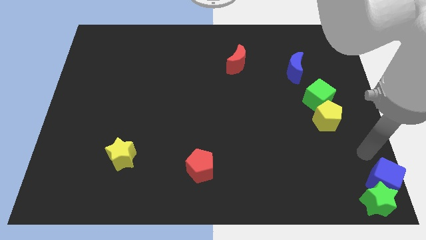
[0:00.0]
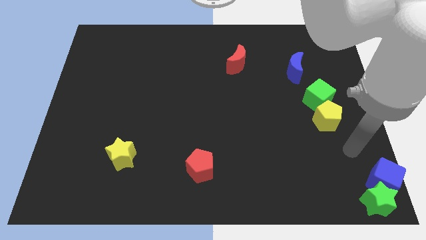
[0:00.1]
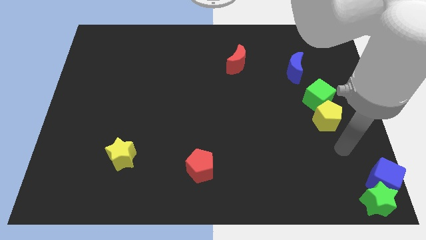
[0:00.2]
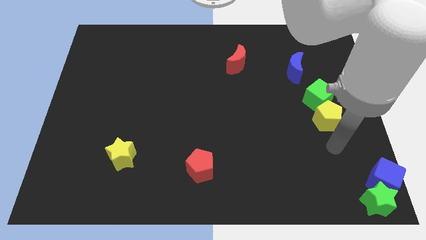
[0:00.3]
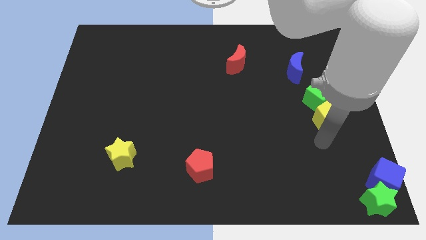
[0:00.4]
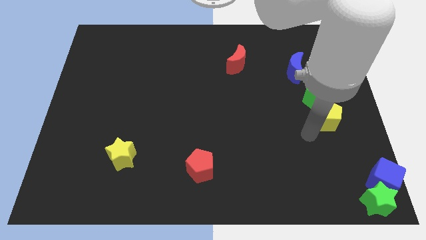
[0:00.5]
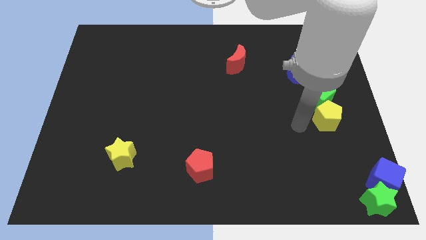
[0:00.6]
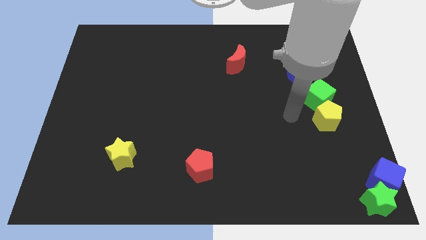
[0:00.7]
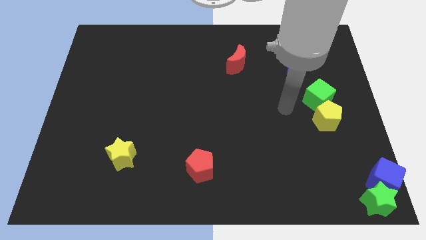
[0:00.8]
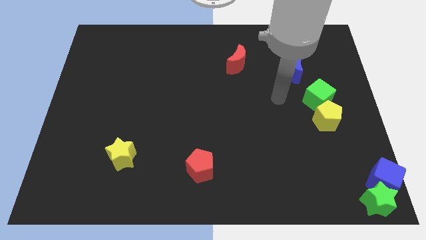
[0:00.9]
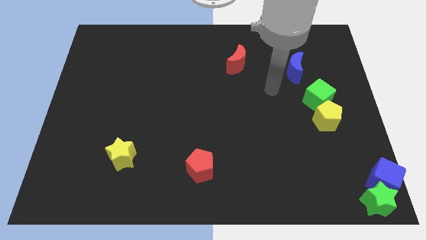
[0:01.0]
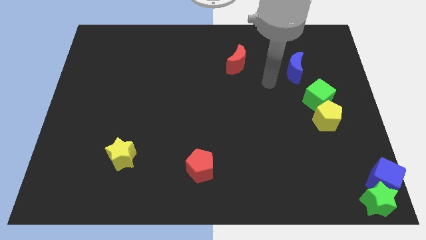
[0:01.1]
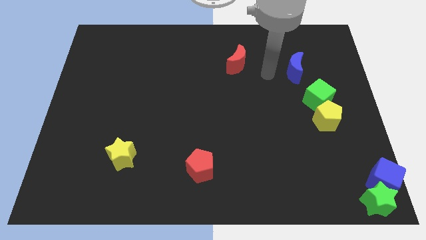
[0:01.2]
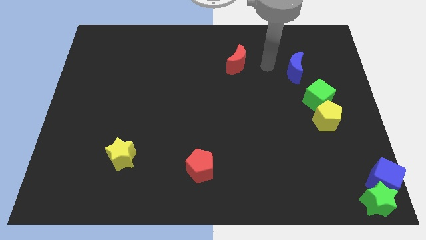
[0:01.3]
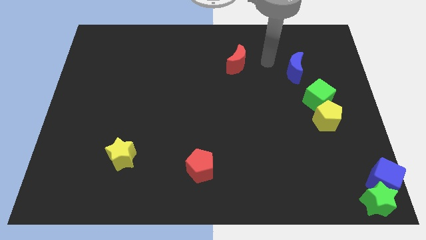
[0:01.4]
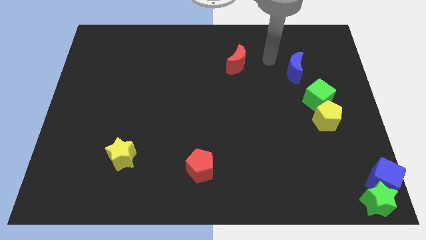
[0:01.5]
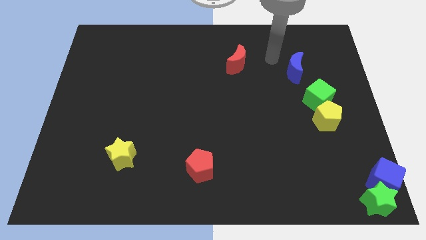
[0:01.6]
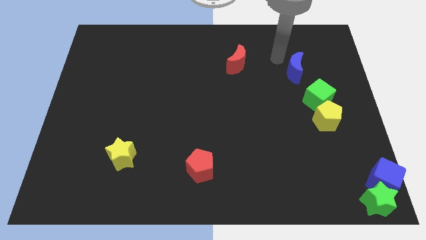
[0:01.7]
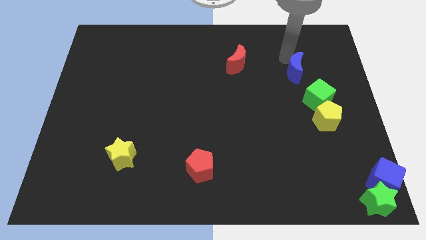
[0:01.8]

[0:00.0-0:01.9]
move your arm to the top left of the blue crescent

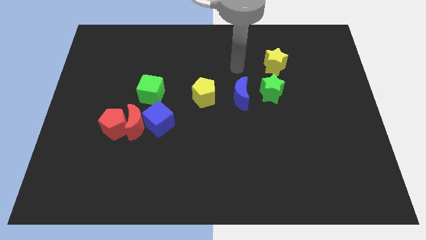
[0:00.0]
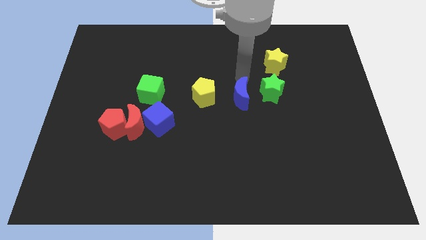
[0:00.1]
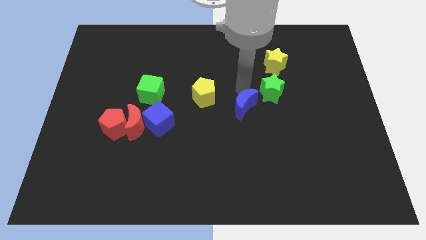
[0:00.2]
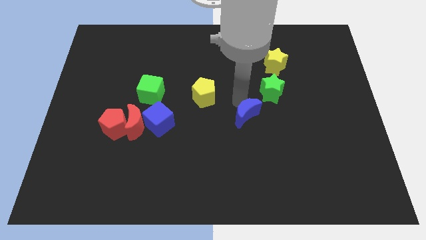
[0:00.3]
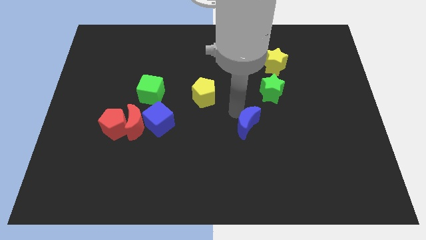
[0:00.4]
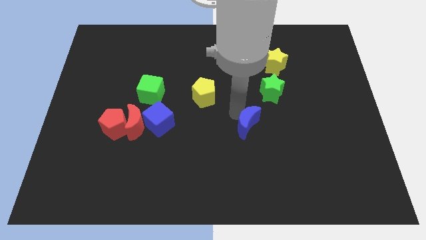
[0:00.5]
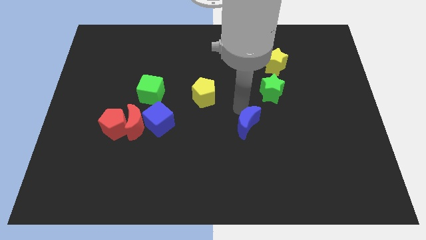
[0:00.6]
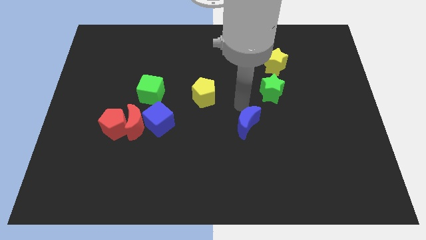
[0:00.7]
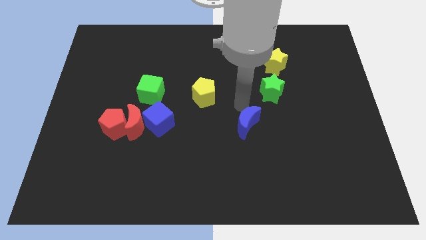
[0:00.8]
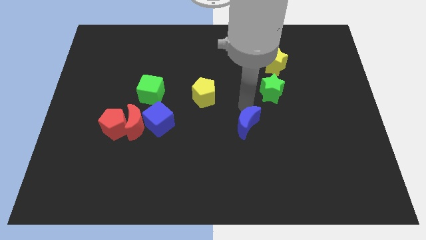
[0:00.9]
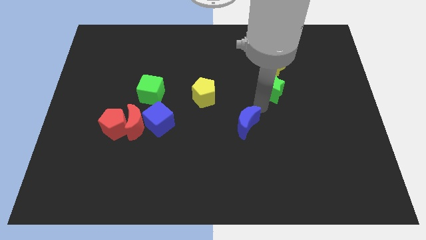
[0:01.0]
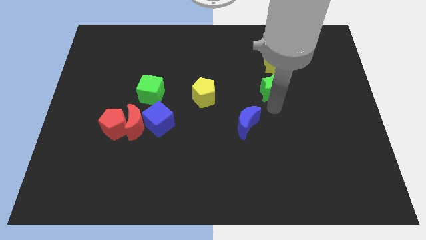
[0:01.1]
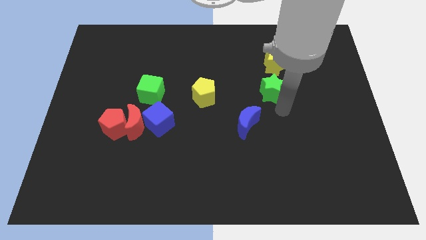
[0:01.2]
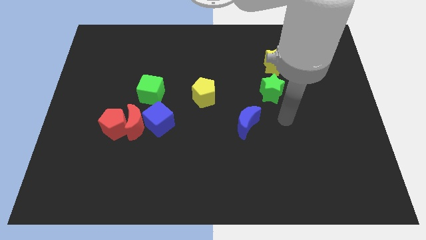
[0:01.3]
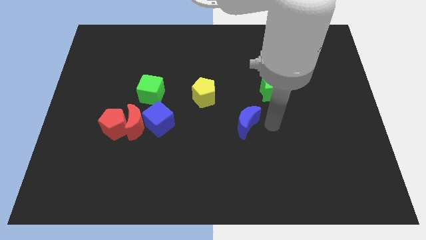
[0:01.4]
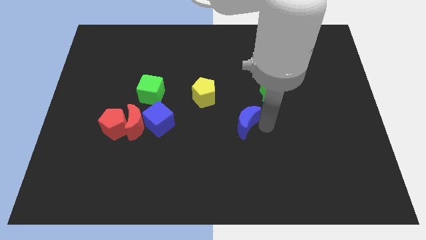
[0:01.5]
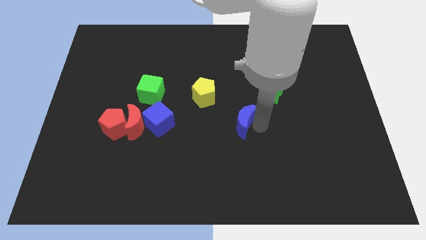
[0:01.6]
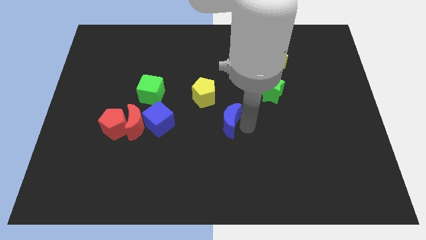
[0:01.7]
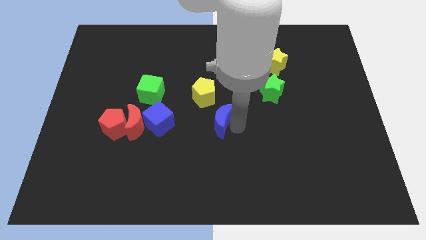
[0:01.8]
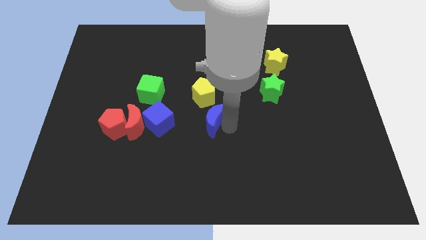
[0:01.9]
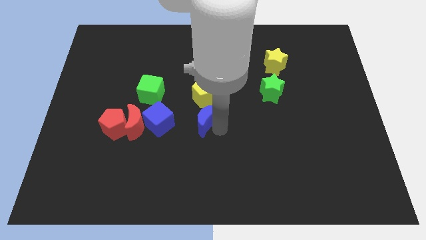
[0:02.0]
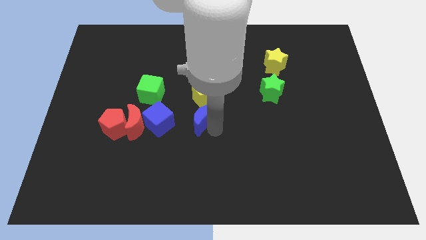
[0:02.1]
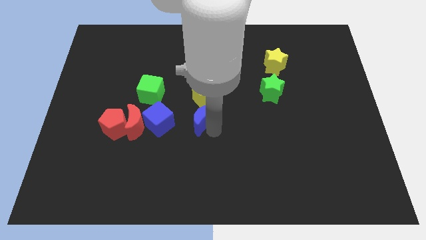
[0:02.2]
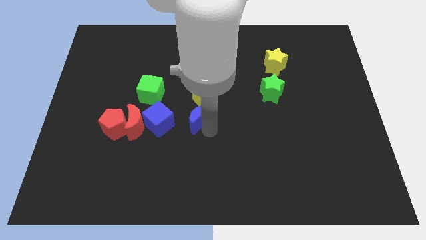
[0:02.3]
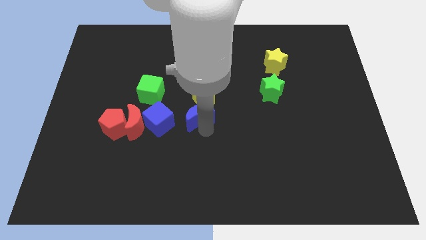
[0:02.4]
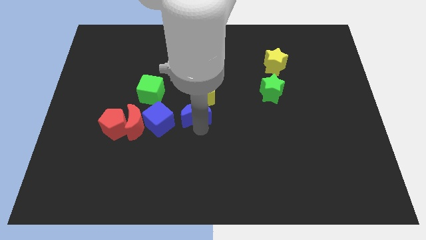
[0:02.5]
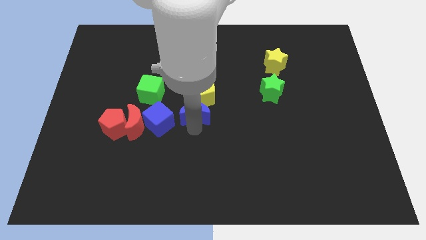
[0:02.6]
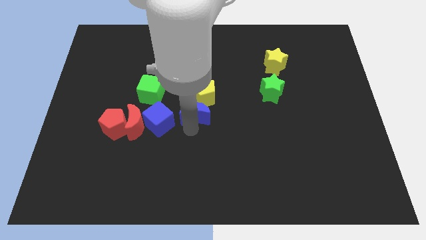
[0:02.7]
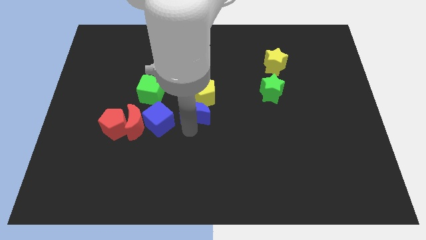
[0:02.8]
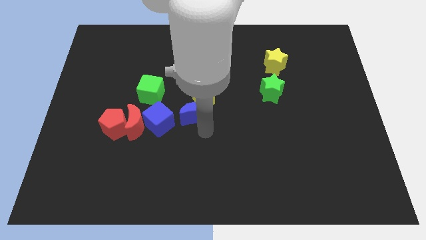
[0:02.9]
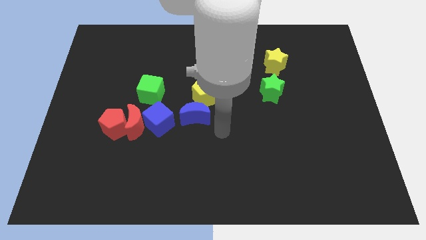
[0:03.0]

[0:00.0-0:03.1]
push the blue crescent to the bottom of the yellow pentagon

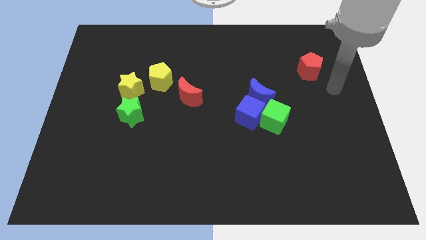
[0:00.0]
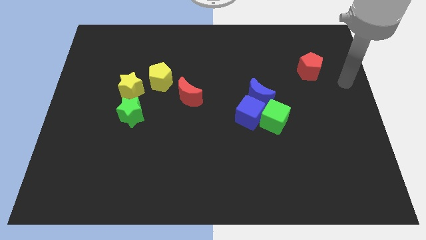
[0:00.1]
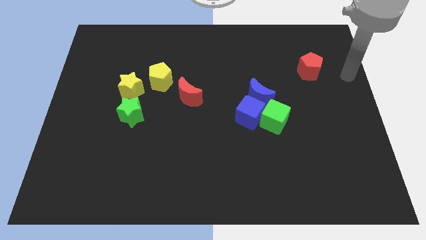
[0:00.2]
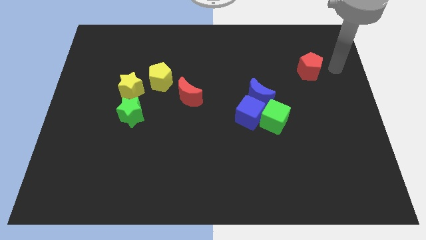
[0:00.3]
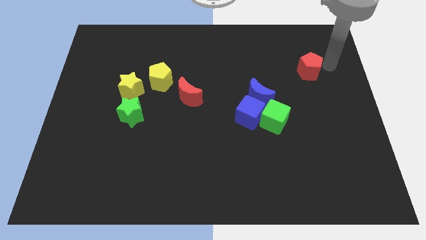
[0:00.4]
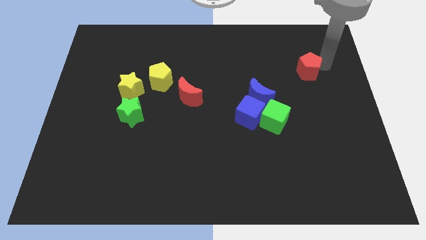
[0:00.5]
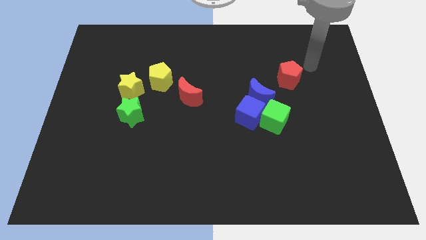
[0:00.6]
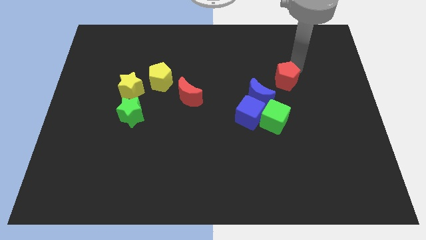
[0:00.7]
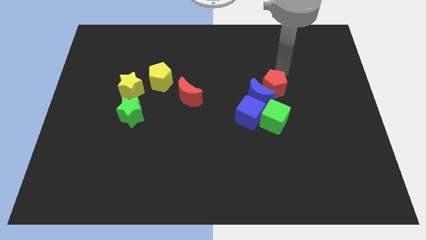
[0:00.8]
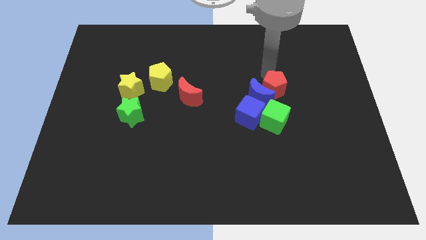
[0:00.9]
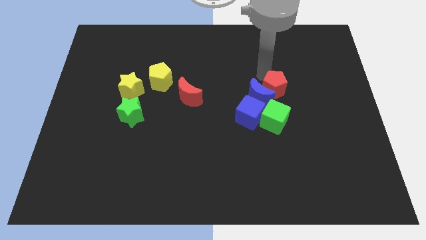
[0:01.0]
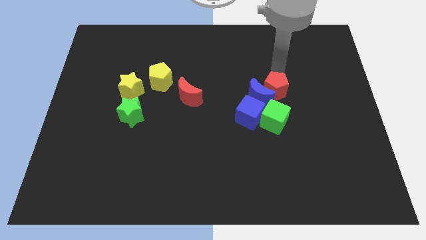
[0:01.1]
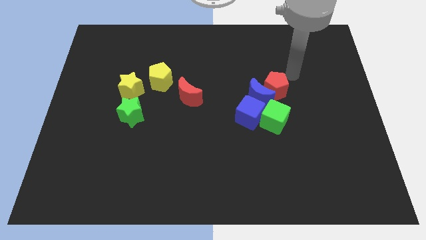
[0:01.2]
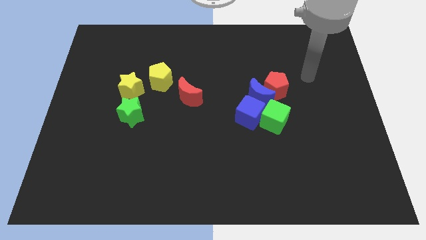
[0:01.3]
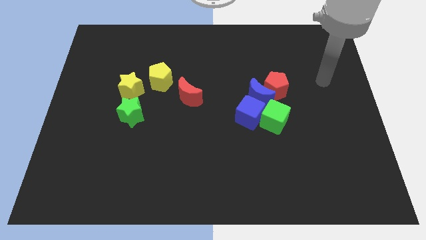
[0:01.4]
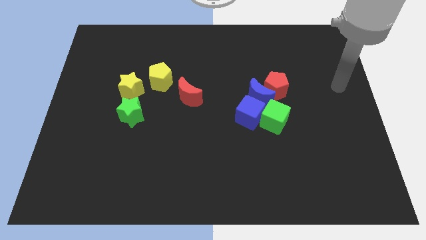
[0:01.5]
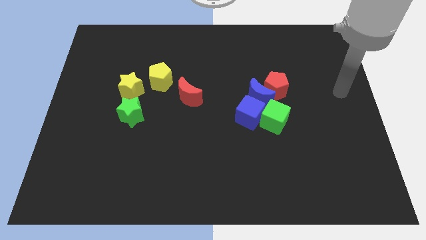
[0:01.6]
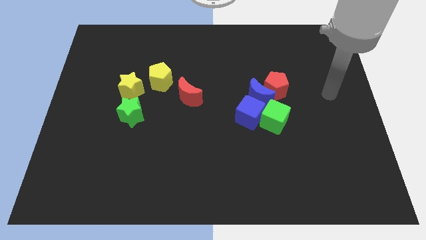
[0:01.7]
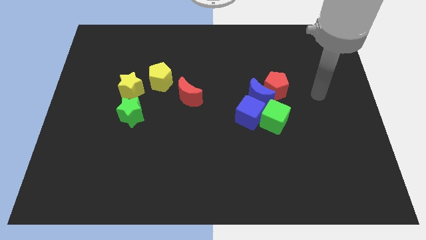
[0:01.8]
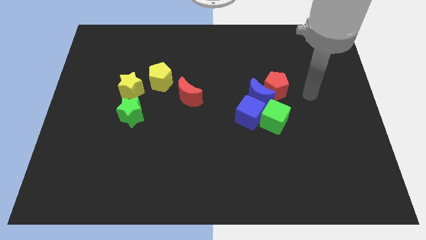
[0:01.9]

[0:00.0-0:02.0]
move the red pentagon into the blue moon

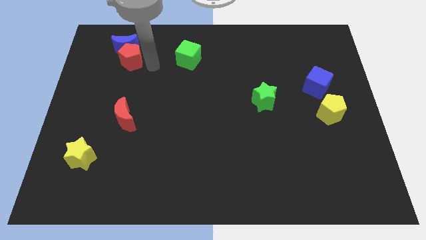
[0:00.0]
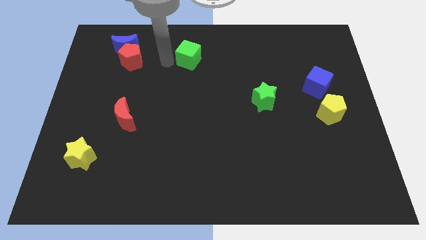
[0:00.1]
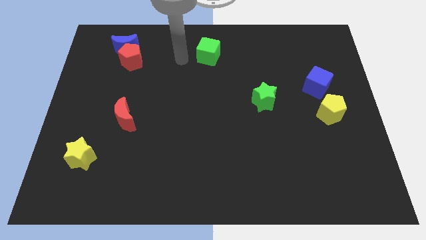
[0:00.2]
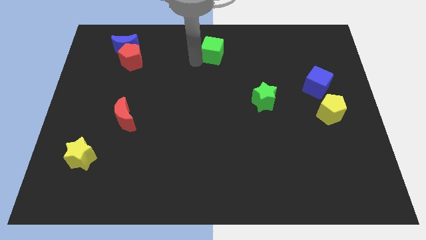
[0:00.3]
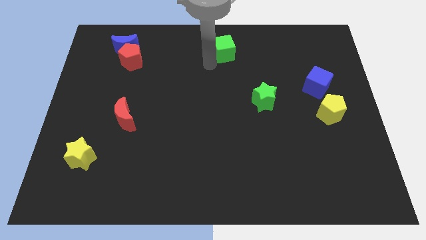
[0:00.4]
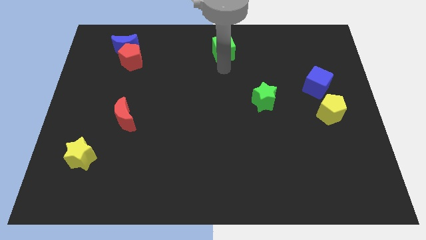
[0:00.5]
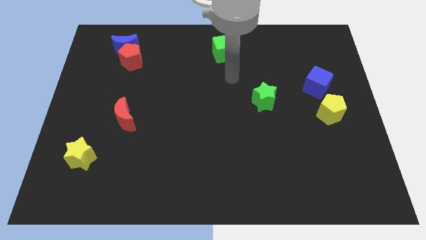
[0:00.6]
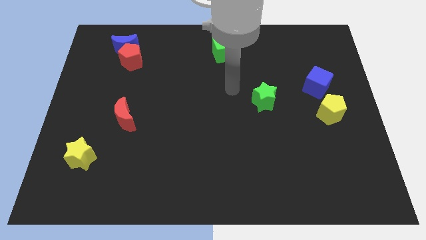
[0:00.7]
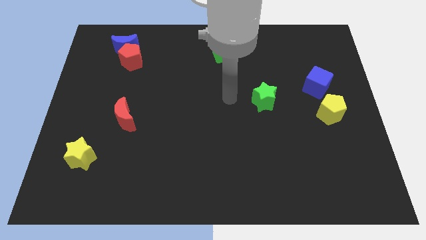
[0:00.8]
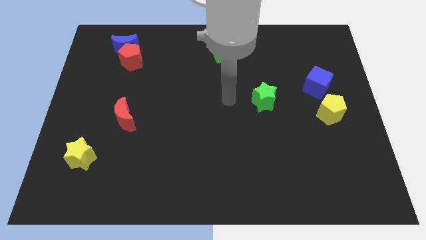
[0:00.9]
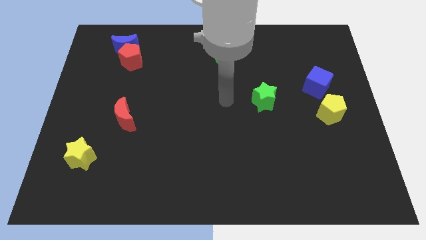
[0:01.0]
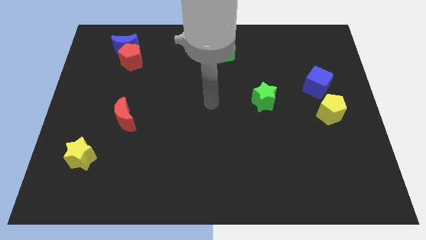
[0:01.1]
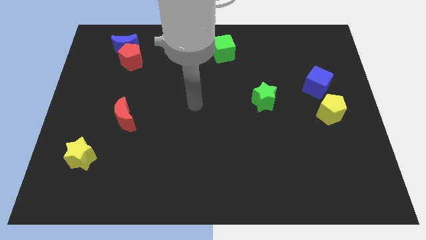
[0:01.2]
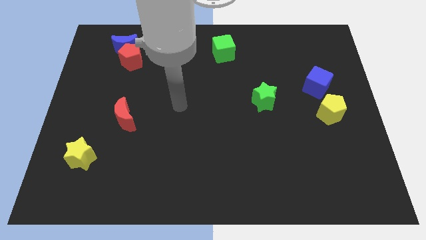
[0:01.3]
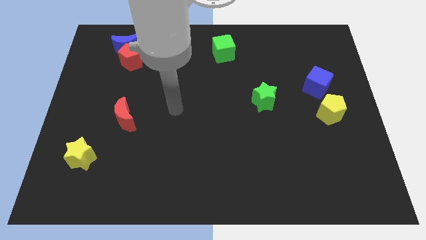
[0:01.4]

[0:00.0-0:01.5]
move the green cube to the top left of the green star

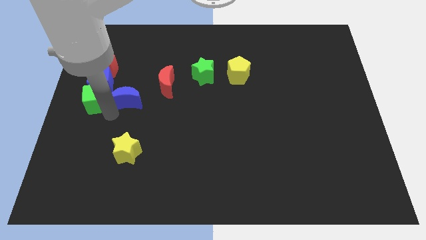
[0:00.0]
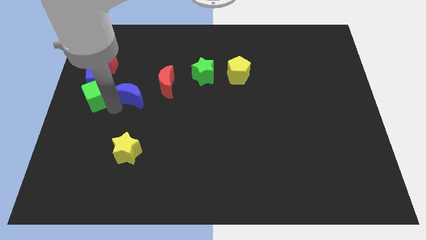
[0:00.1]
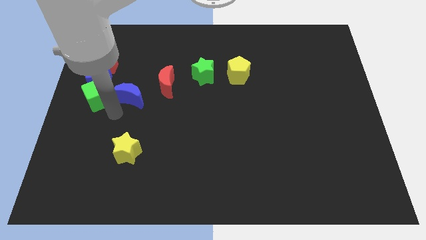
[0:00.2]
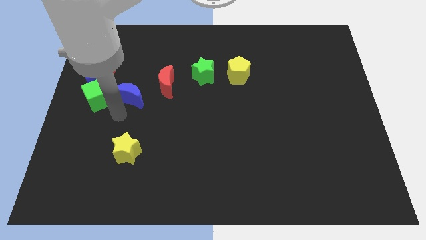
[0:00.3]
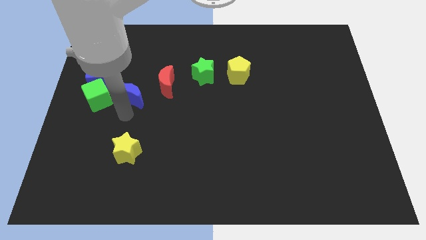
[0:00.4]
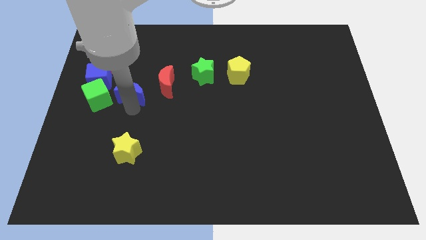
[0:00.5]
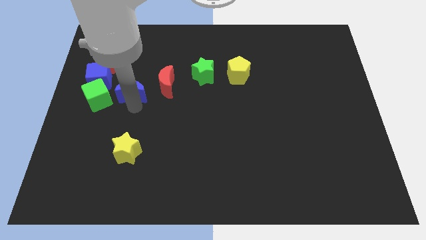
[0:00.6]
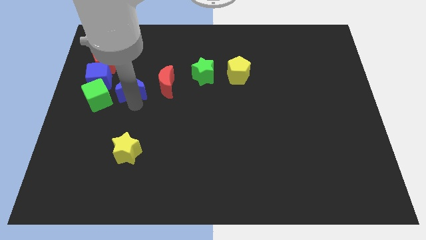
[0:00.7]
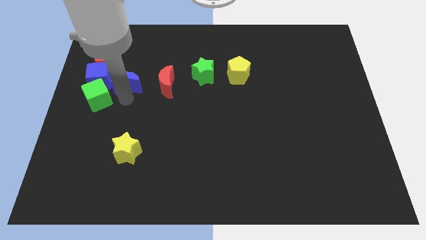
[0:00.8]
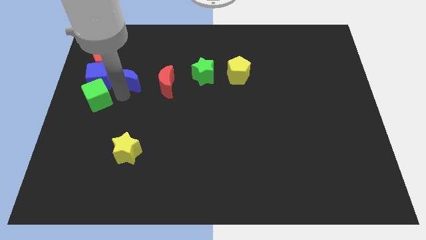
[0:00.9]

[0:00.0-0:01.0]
push blue crescent beside blue cube
